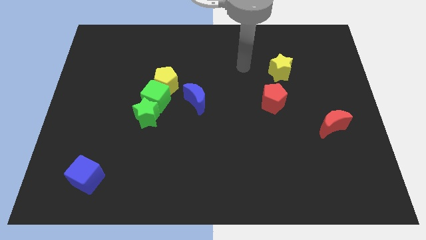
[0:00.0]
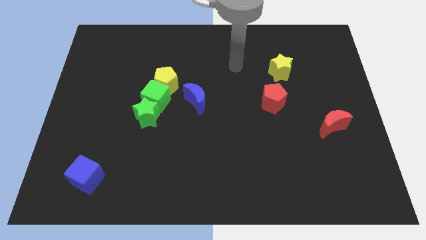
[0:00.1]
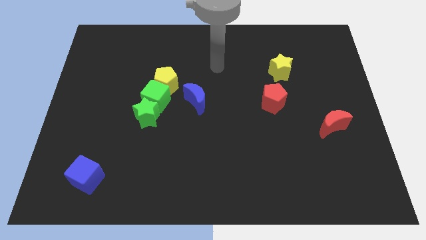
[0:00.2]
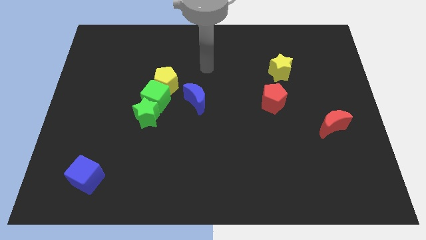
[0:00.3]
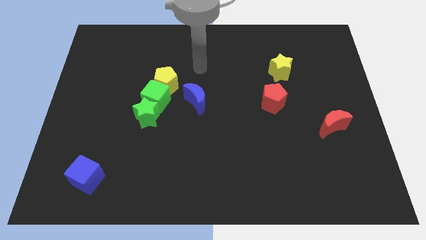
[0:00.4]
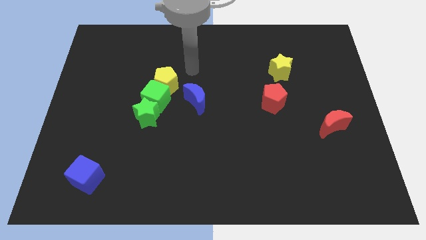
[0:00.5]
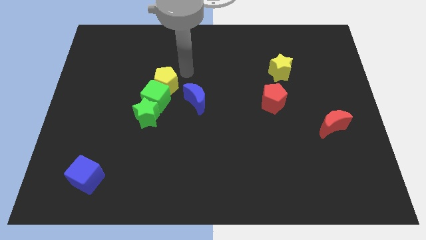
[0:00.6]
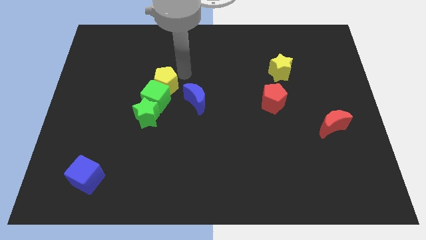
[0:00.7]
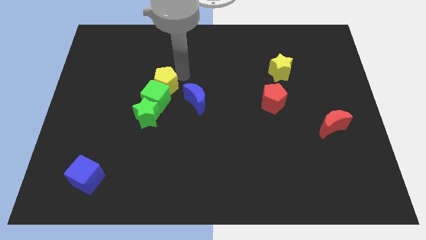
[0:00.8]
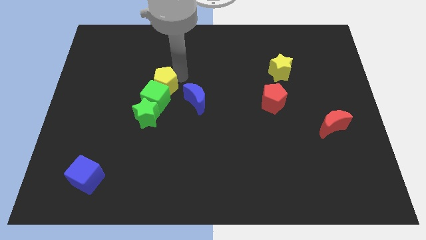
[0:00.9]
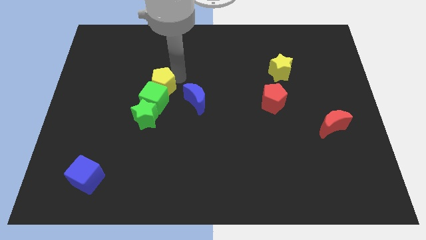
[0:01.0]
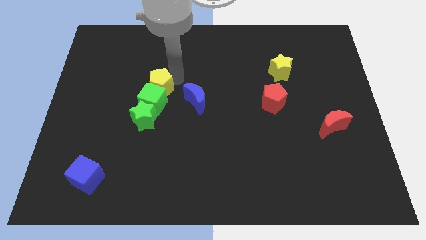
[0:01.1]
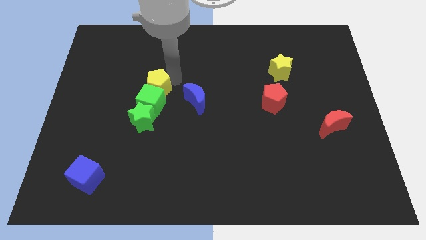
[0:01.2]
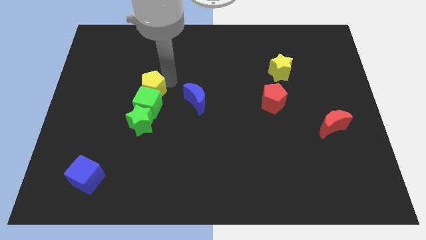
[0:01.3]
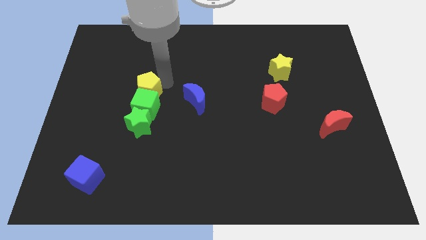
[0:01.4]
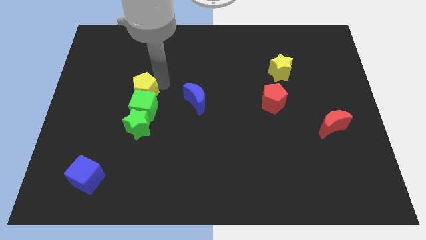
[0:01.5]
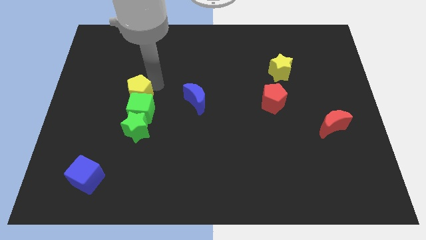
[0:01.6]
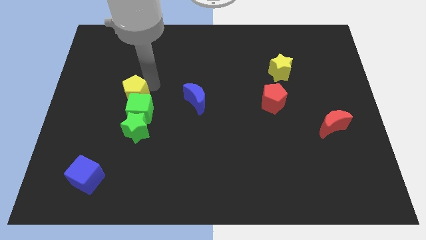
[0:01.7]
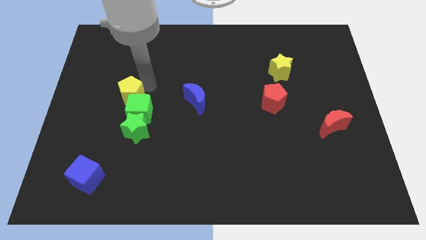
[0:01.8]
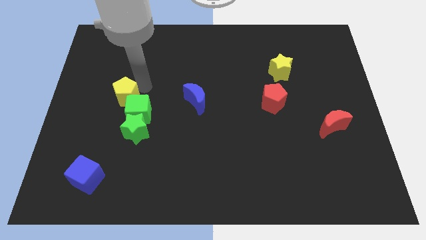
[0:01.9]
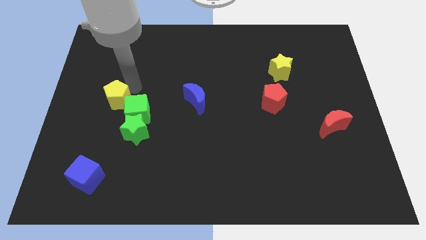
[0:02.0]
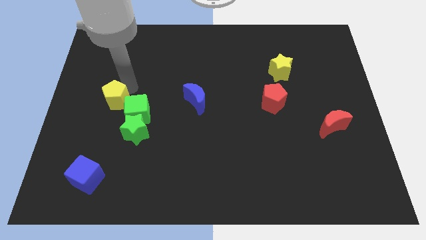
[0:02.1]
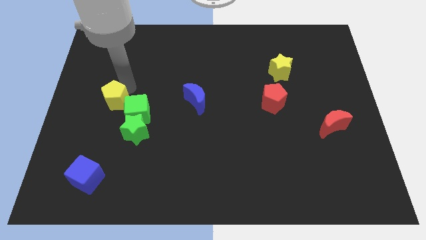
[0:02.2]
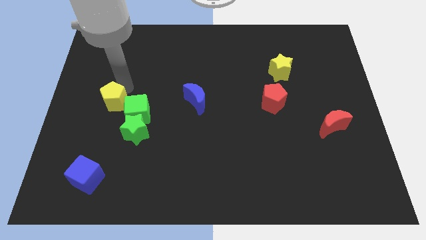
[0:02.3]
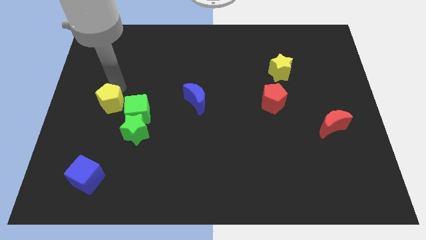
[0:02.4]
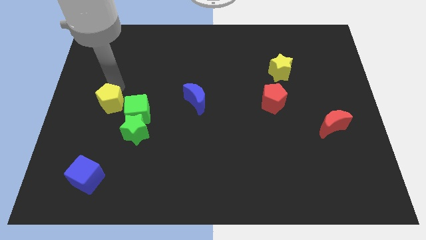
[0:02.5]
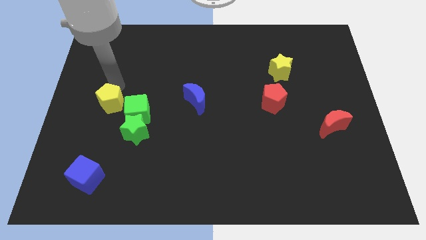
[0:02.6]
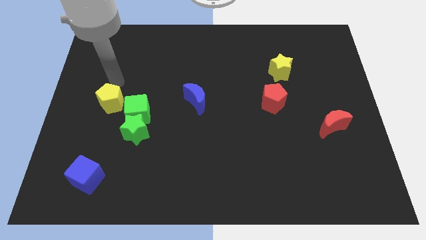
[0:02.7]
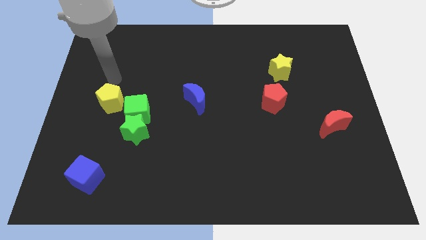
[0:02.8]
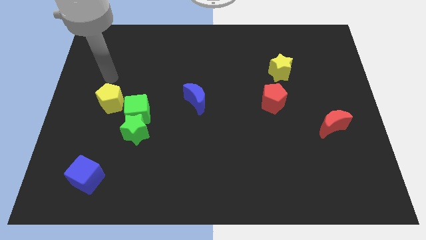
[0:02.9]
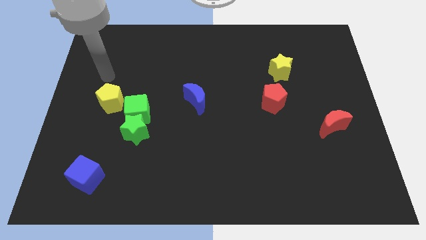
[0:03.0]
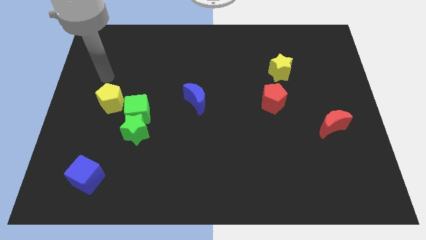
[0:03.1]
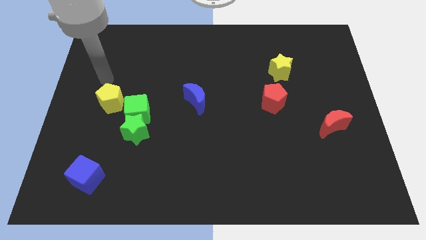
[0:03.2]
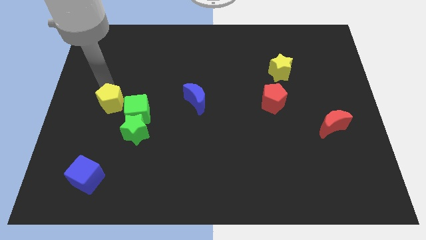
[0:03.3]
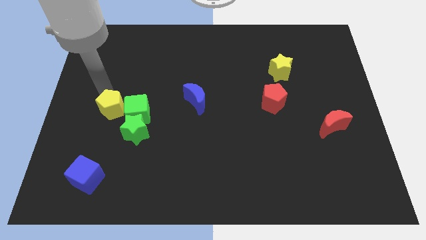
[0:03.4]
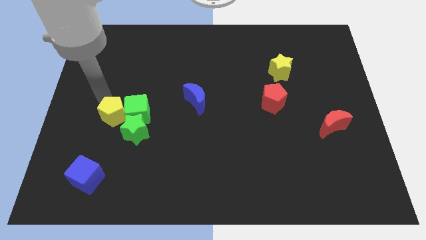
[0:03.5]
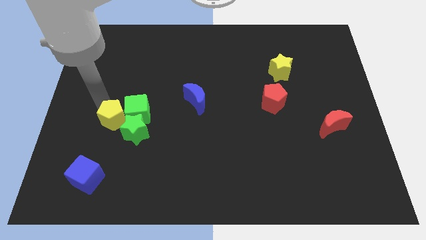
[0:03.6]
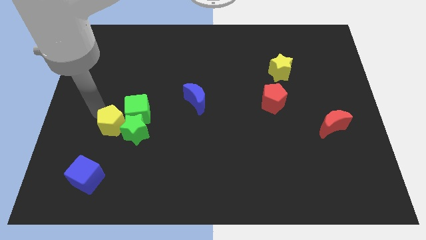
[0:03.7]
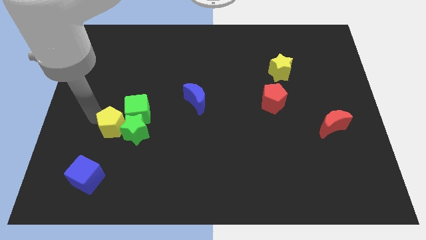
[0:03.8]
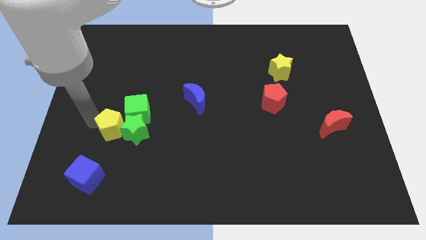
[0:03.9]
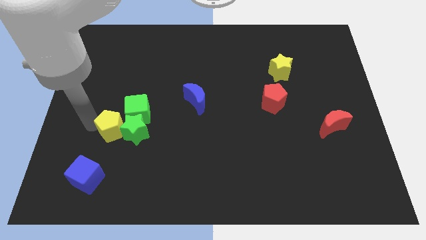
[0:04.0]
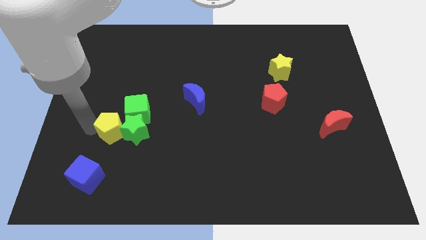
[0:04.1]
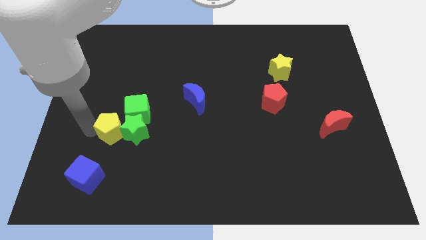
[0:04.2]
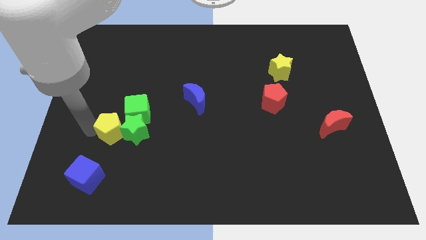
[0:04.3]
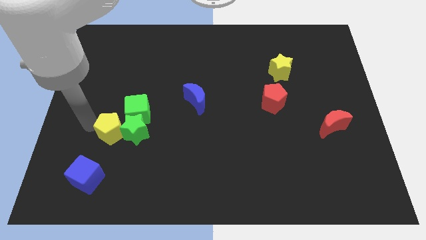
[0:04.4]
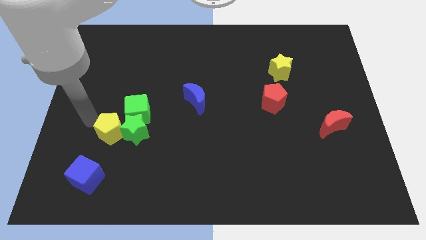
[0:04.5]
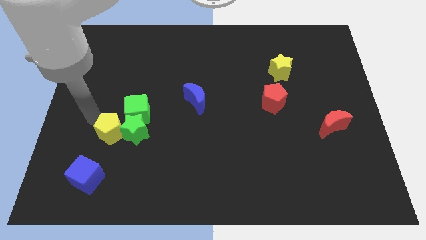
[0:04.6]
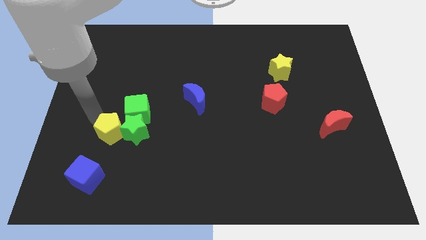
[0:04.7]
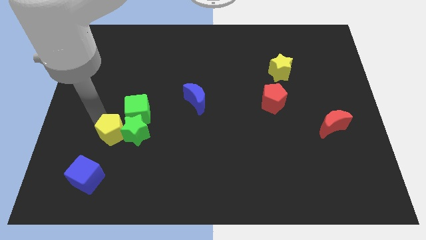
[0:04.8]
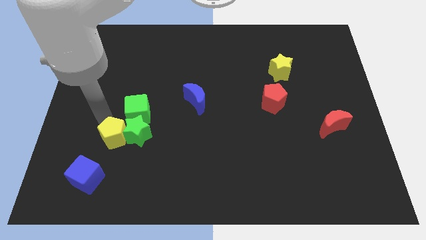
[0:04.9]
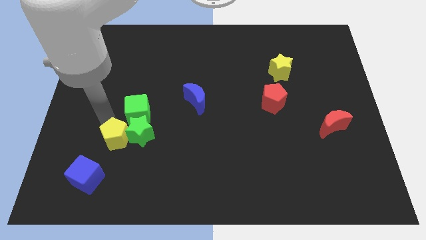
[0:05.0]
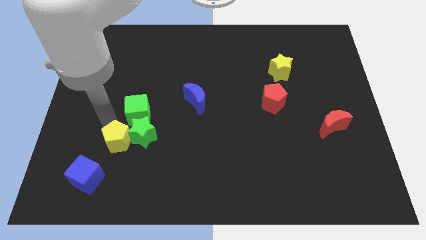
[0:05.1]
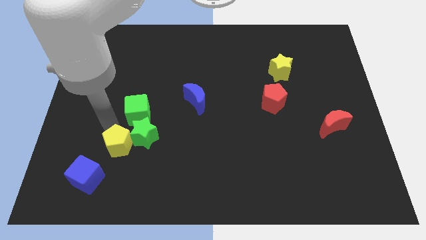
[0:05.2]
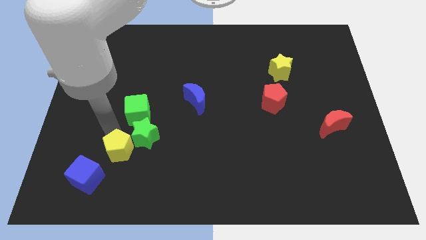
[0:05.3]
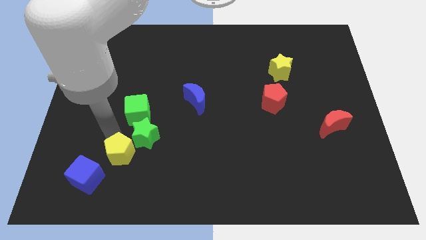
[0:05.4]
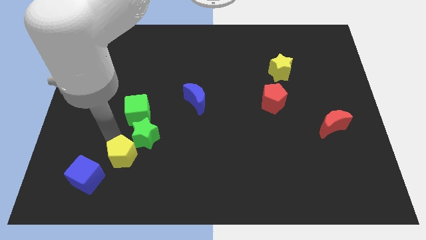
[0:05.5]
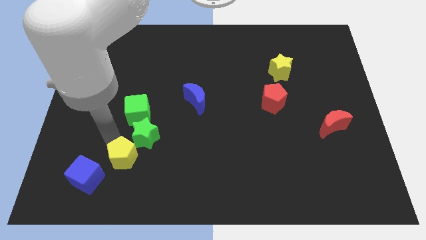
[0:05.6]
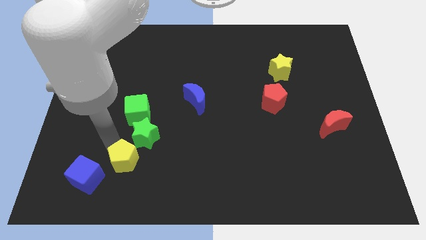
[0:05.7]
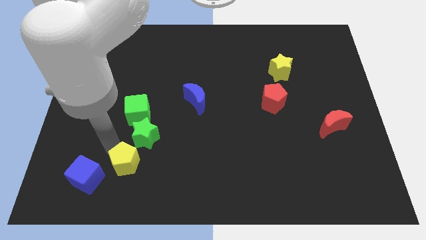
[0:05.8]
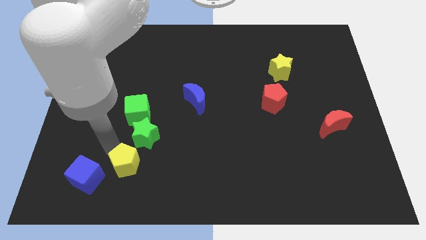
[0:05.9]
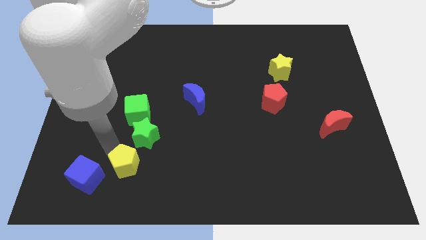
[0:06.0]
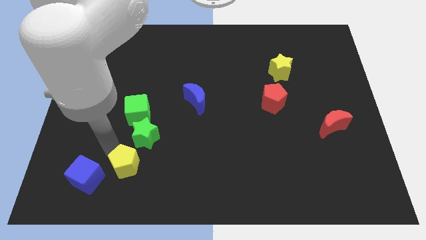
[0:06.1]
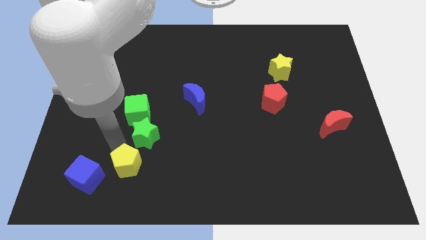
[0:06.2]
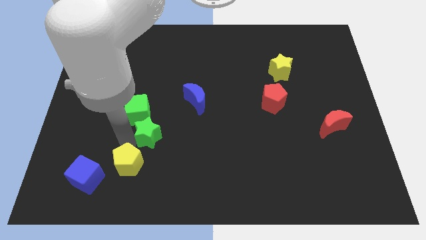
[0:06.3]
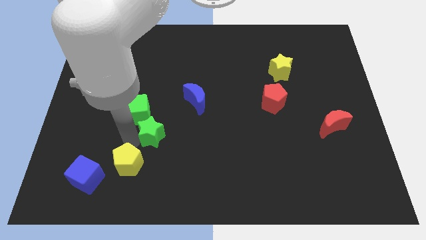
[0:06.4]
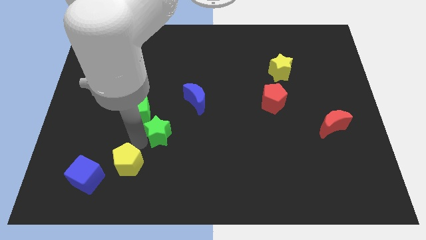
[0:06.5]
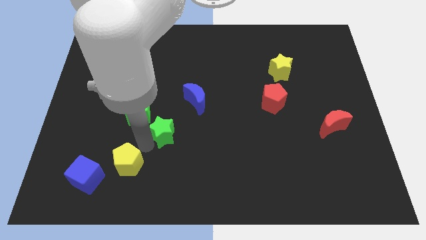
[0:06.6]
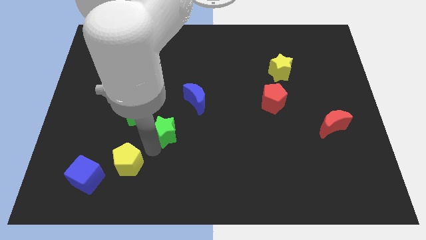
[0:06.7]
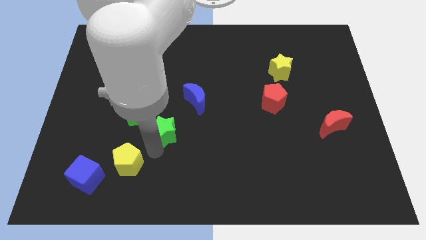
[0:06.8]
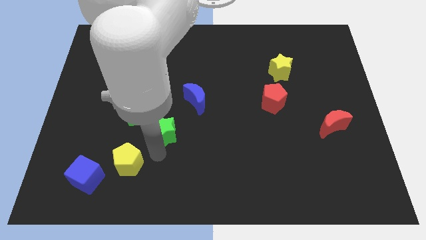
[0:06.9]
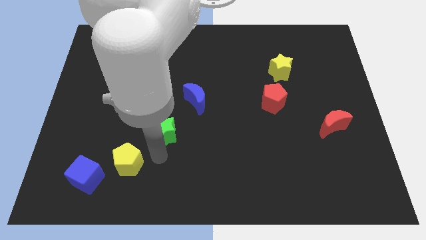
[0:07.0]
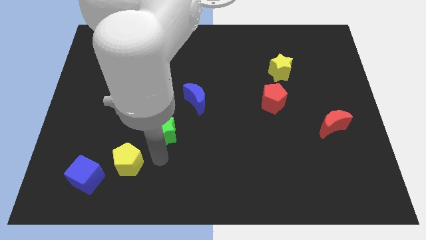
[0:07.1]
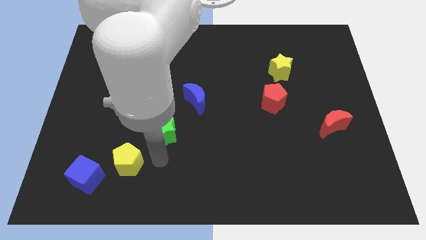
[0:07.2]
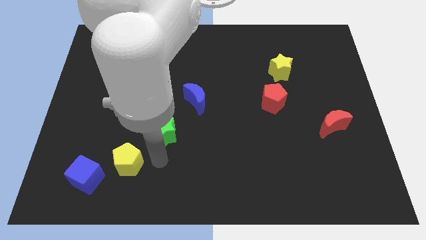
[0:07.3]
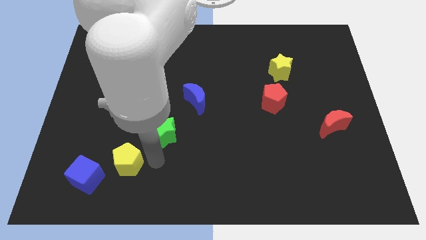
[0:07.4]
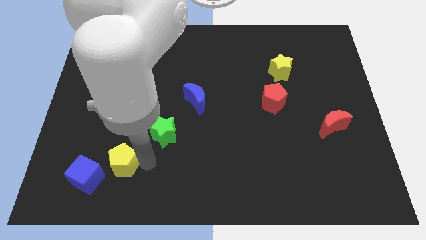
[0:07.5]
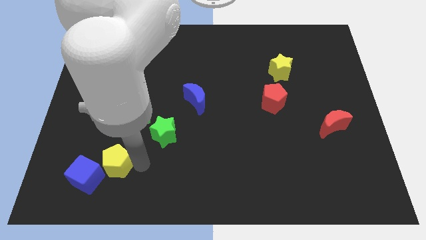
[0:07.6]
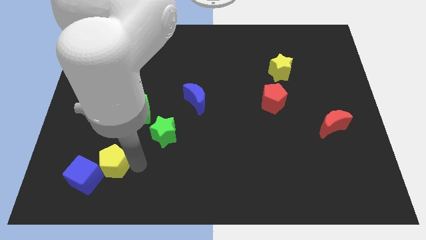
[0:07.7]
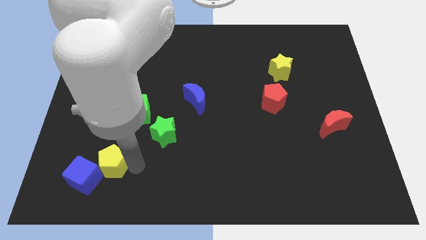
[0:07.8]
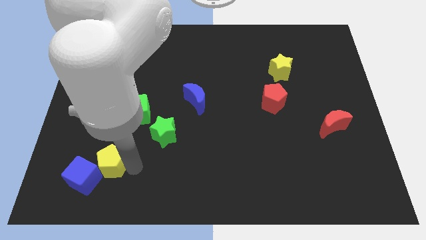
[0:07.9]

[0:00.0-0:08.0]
put the yellow pentagon next to the blue cube
